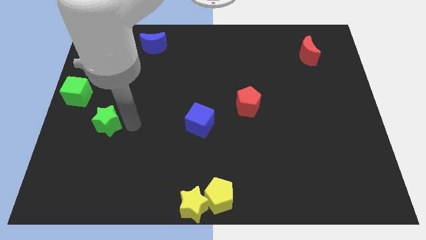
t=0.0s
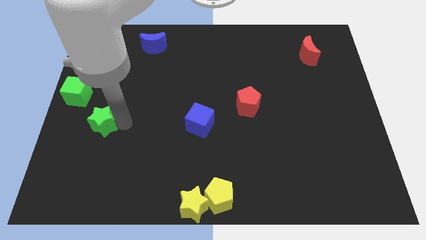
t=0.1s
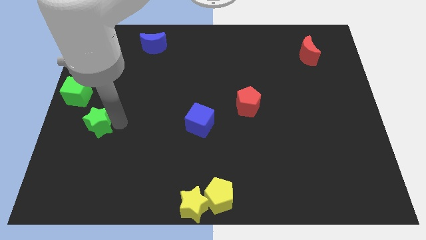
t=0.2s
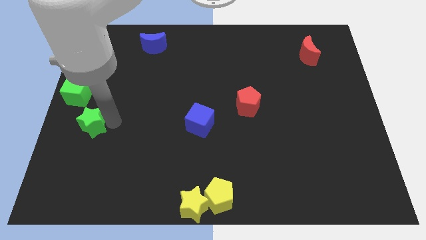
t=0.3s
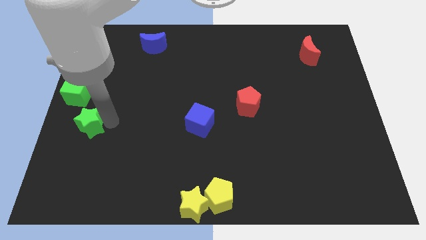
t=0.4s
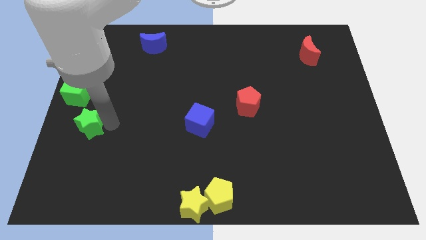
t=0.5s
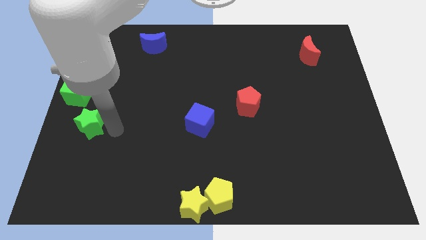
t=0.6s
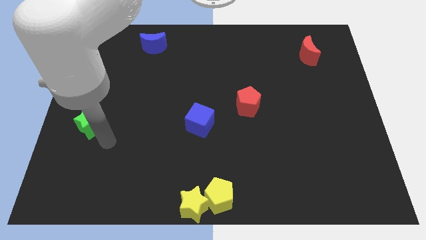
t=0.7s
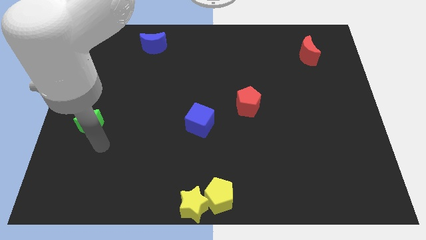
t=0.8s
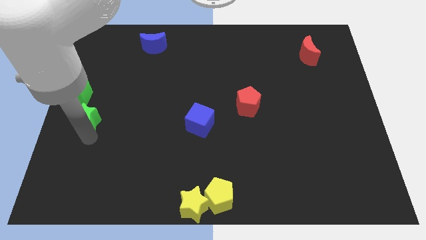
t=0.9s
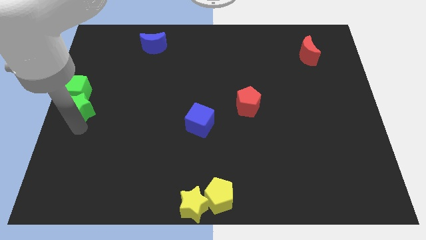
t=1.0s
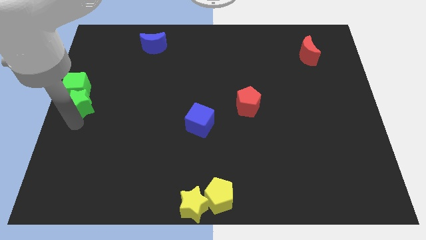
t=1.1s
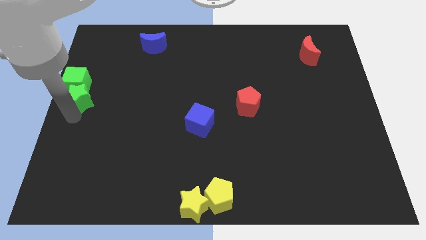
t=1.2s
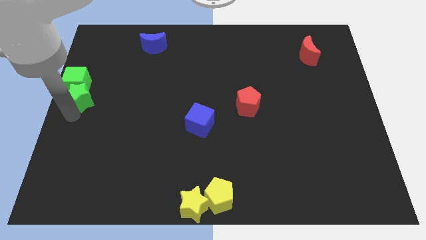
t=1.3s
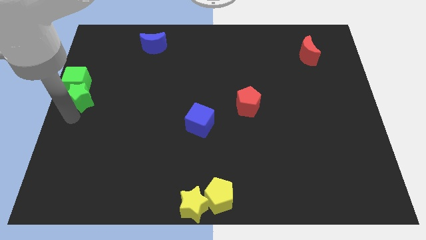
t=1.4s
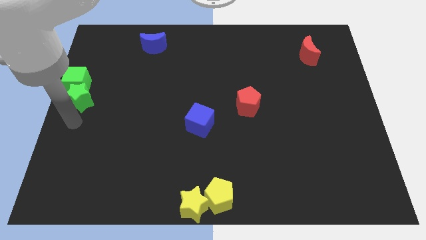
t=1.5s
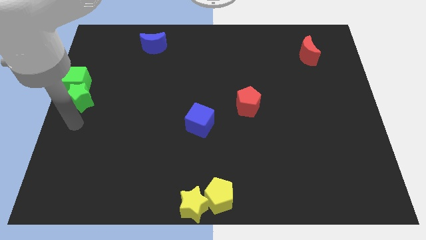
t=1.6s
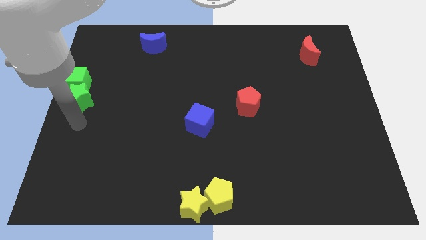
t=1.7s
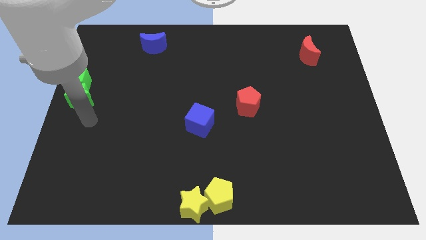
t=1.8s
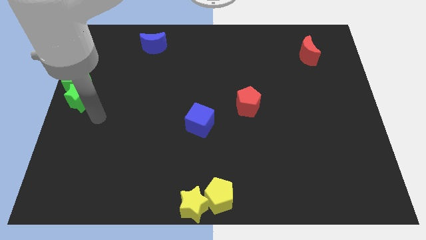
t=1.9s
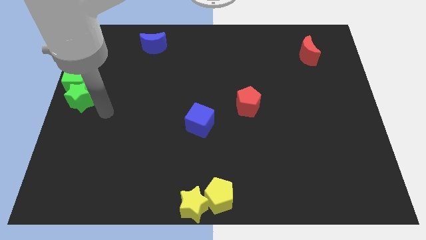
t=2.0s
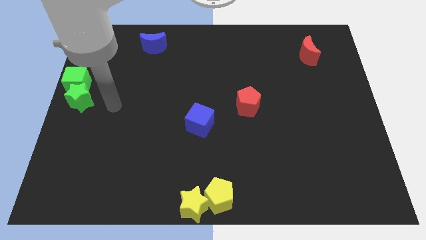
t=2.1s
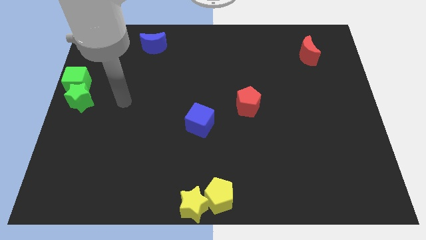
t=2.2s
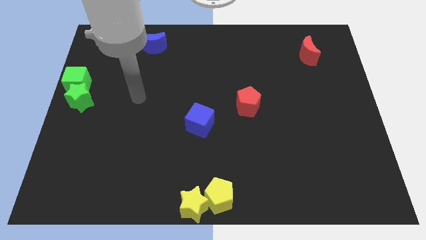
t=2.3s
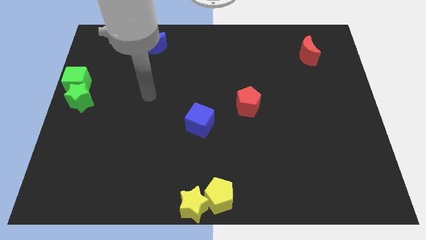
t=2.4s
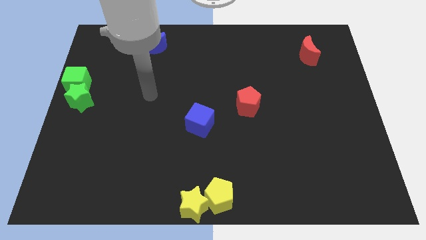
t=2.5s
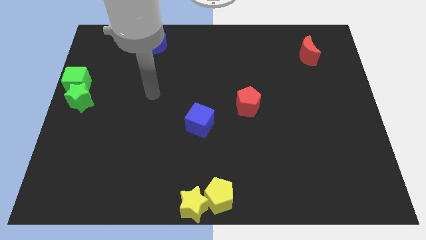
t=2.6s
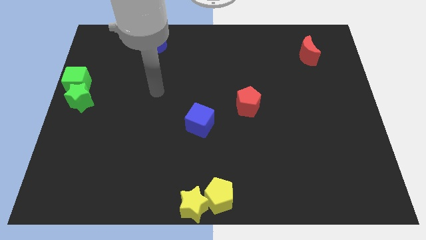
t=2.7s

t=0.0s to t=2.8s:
group up the green blocks at the center left of the board

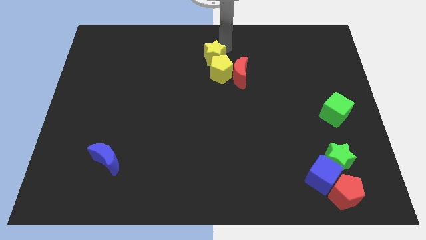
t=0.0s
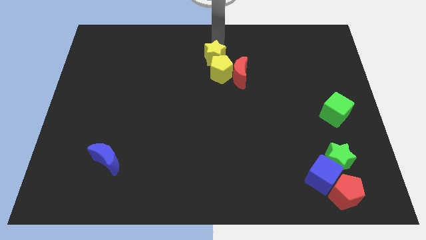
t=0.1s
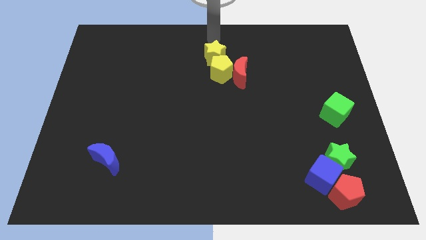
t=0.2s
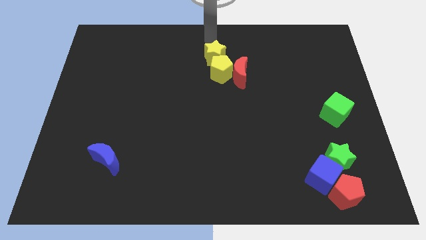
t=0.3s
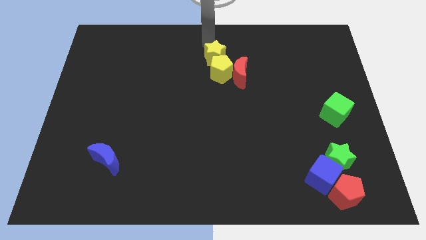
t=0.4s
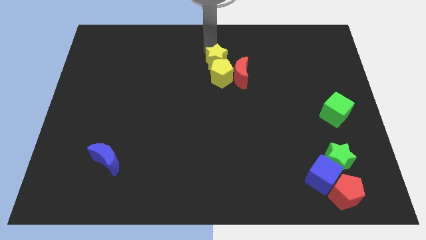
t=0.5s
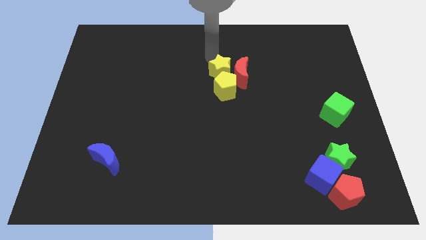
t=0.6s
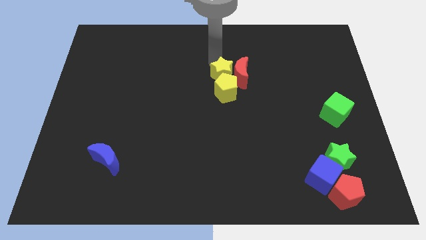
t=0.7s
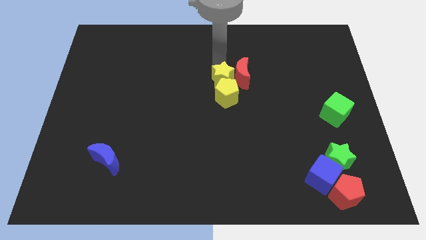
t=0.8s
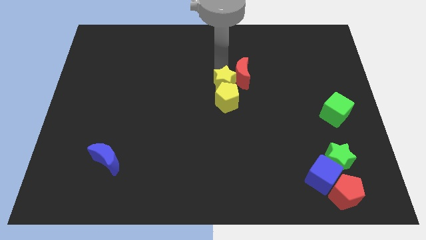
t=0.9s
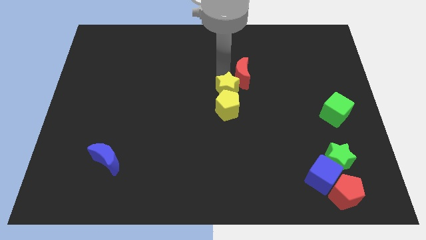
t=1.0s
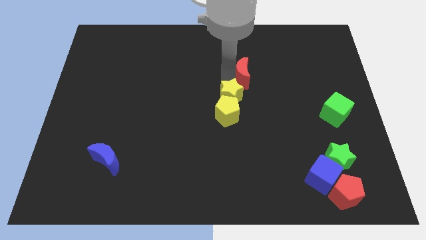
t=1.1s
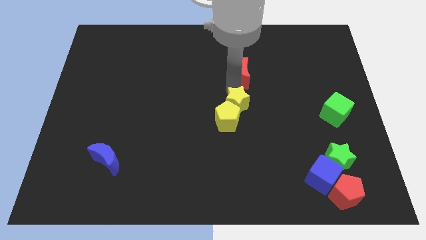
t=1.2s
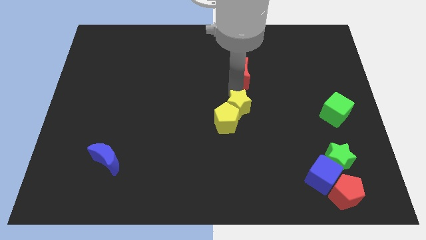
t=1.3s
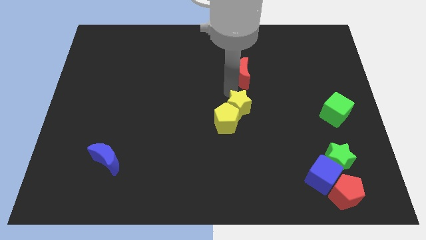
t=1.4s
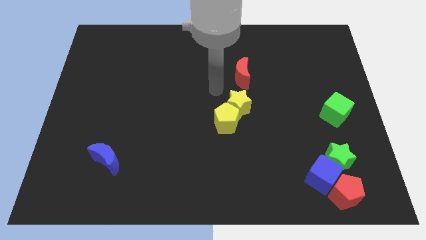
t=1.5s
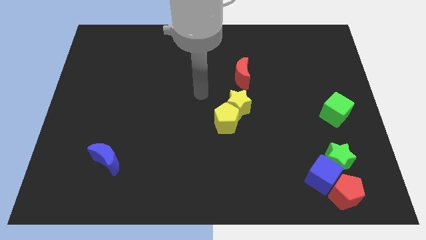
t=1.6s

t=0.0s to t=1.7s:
push the yellow pentagon with the yellow star towards the center of the board

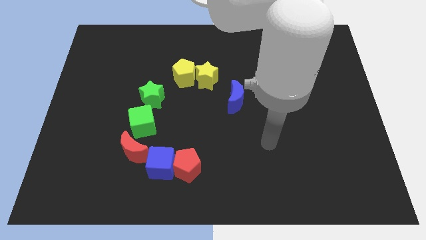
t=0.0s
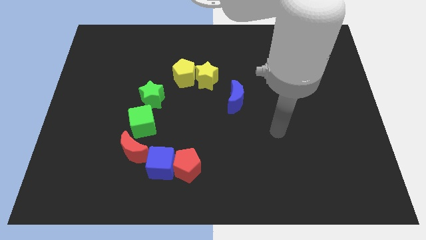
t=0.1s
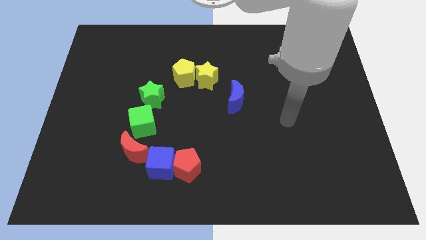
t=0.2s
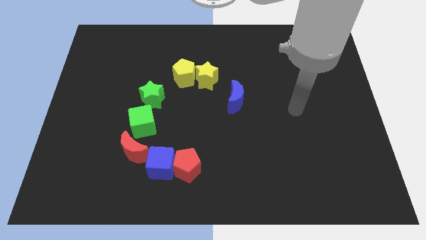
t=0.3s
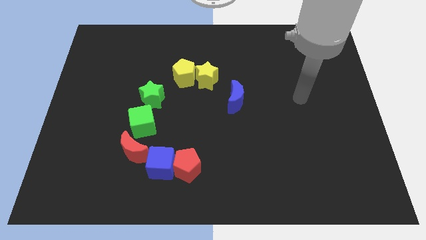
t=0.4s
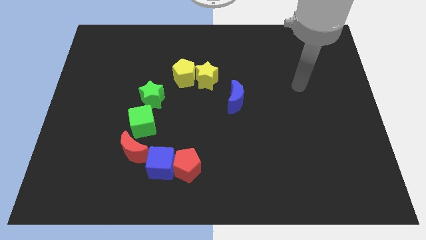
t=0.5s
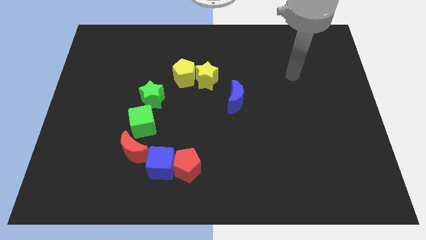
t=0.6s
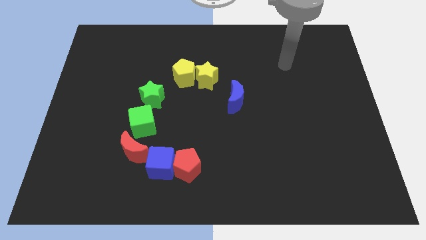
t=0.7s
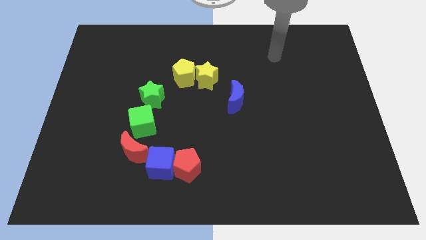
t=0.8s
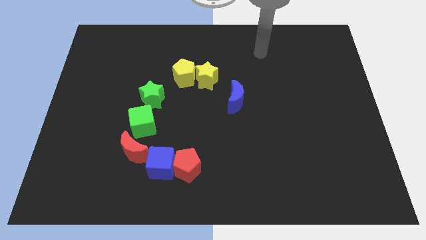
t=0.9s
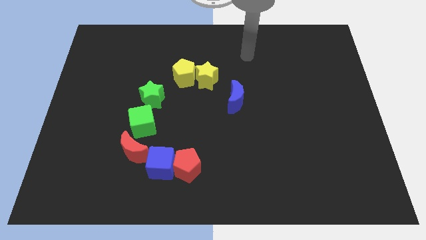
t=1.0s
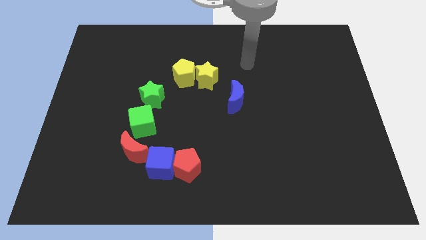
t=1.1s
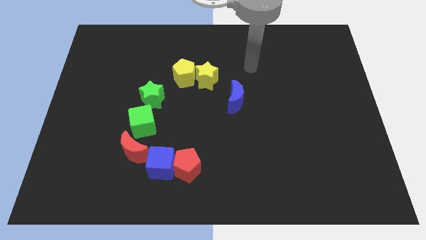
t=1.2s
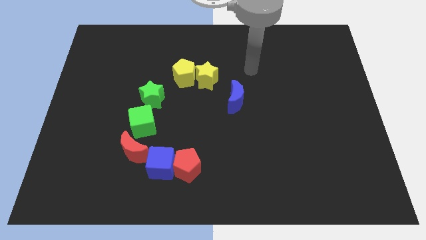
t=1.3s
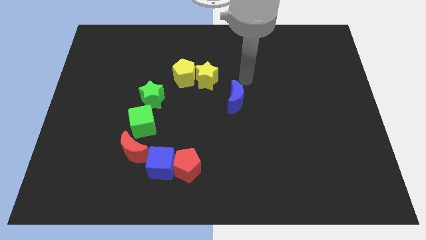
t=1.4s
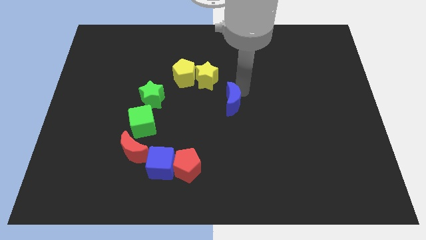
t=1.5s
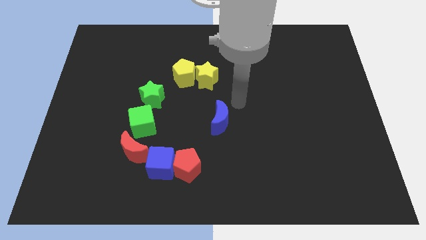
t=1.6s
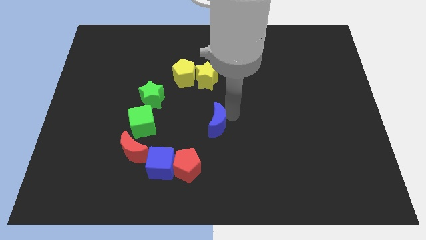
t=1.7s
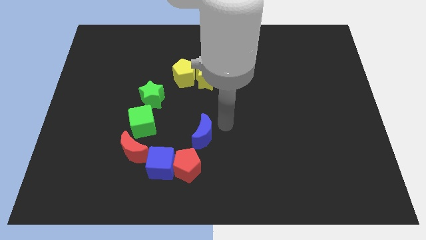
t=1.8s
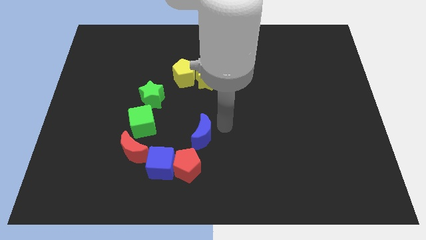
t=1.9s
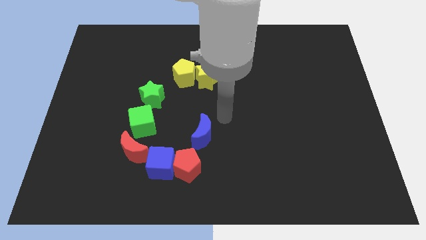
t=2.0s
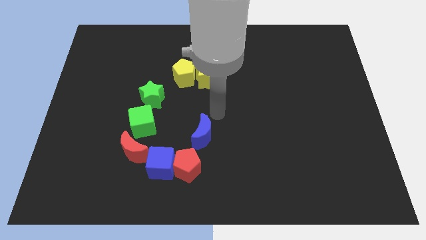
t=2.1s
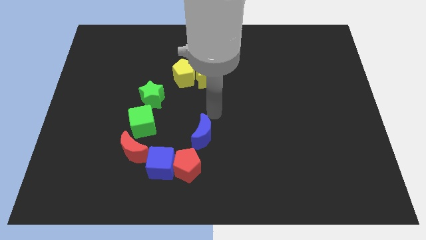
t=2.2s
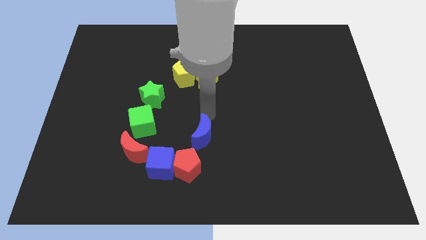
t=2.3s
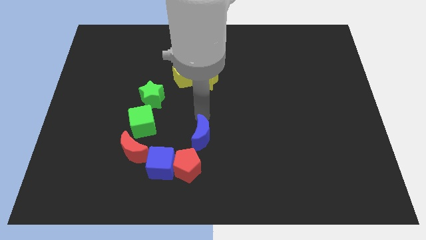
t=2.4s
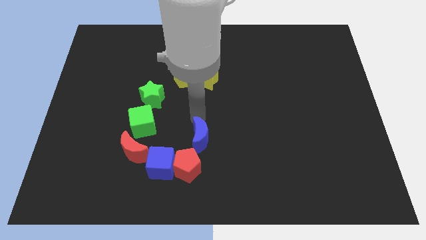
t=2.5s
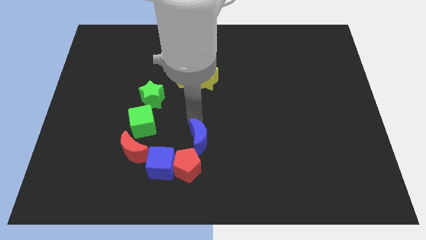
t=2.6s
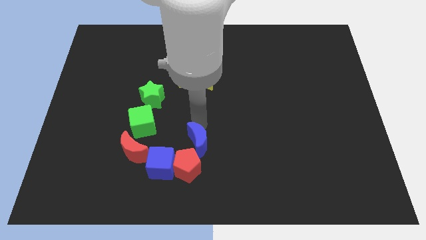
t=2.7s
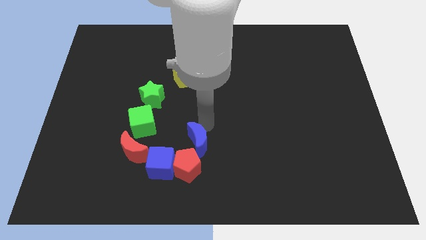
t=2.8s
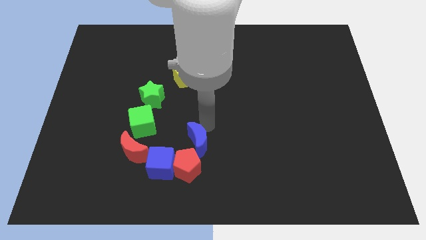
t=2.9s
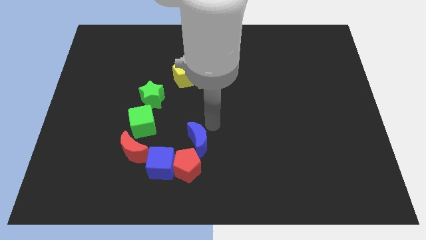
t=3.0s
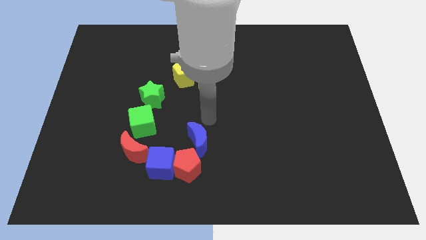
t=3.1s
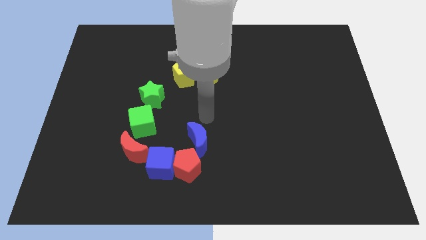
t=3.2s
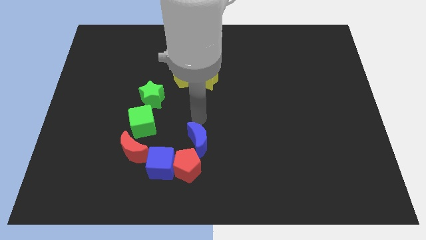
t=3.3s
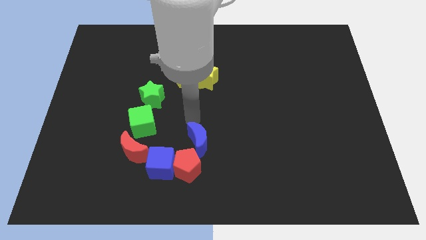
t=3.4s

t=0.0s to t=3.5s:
move blue moon above red pentagon

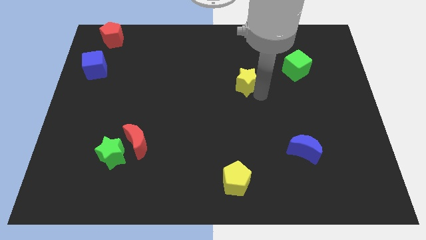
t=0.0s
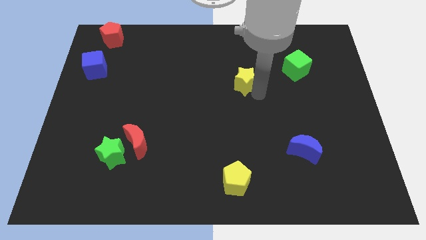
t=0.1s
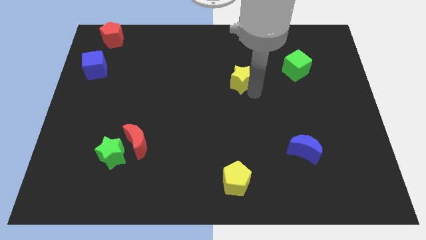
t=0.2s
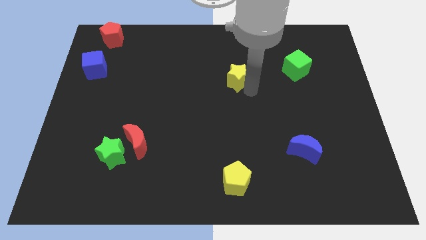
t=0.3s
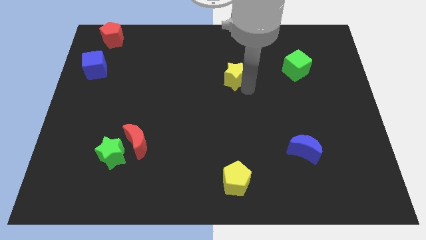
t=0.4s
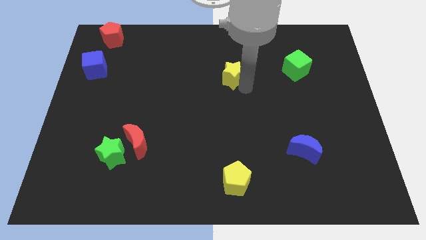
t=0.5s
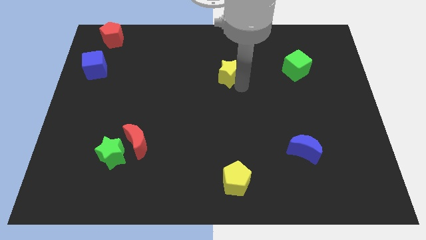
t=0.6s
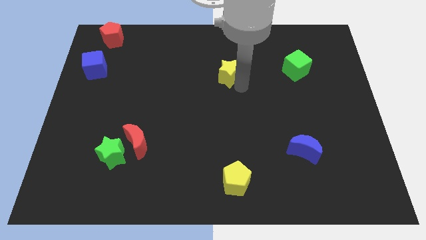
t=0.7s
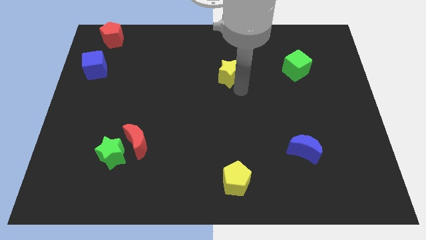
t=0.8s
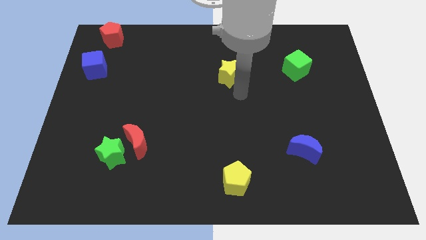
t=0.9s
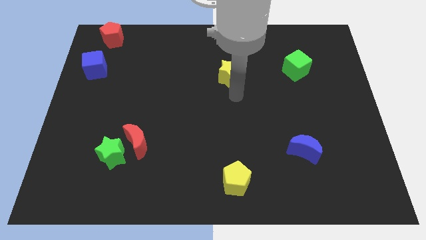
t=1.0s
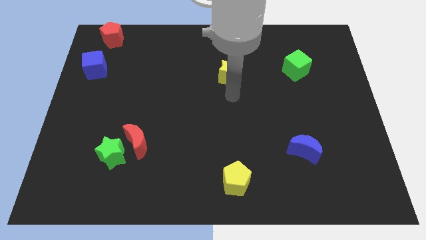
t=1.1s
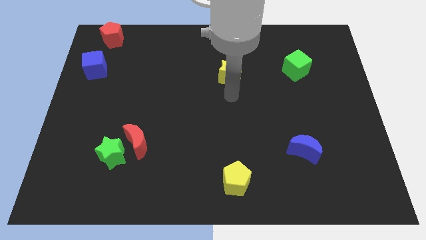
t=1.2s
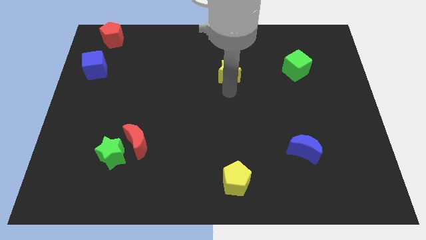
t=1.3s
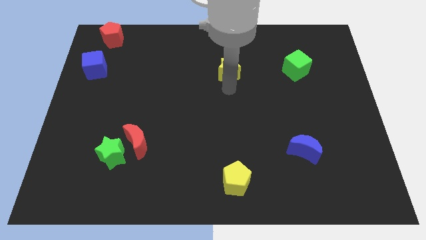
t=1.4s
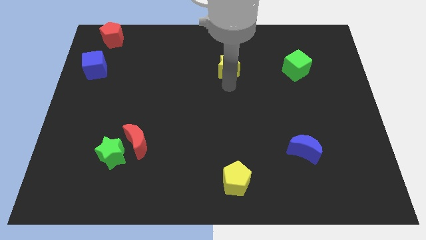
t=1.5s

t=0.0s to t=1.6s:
push the yellow star parallel to the left of the green cube
